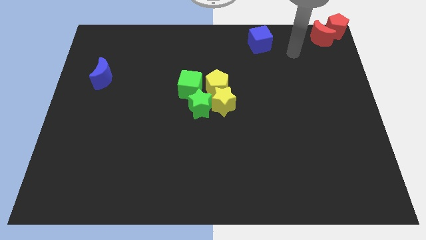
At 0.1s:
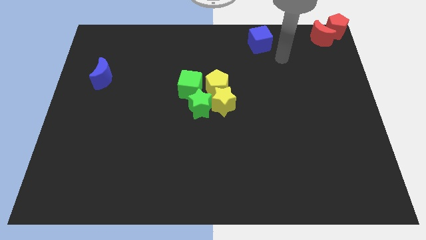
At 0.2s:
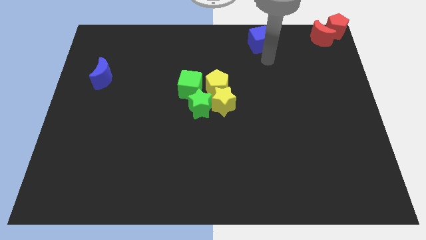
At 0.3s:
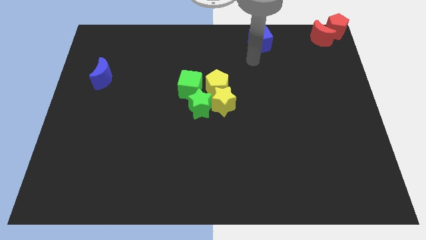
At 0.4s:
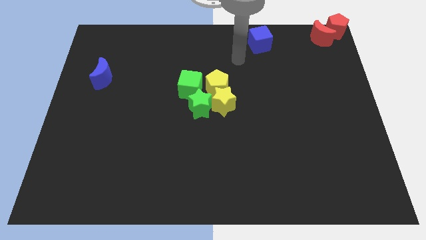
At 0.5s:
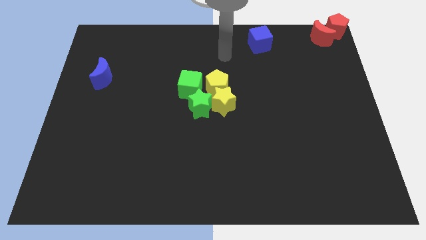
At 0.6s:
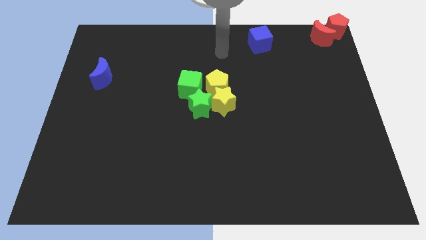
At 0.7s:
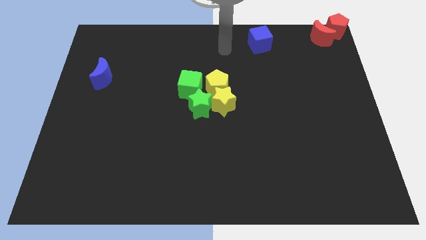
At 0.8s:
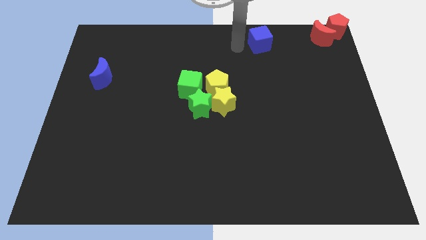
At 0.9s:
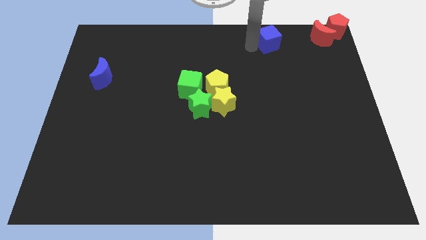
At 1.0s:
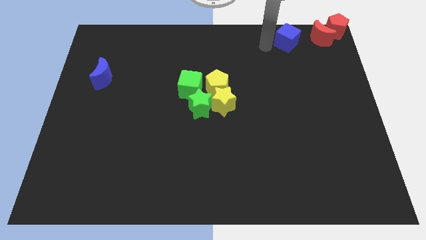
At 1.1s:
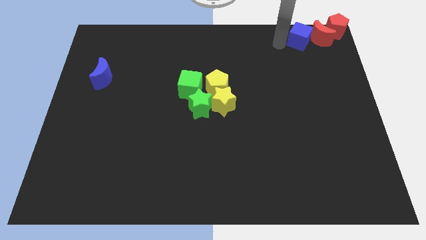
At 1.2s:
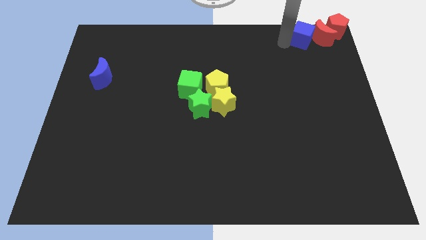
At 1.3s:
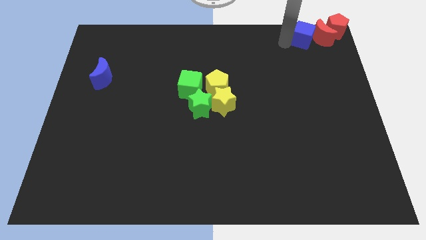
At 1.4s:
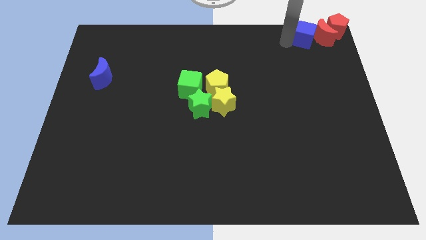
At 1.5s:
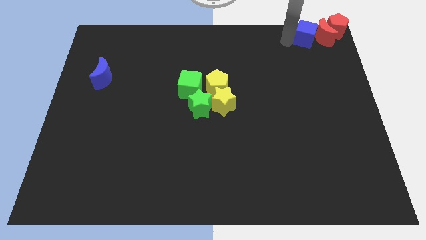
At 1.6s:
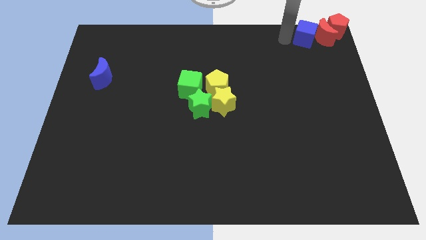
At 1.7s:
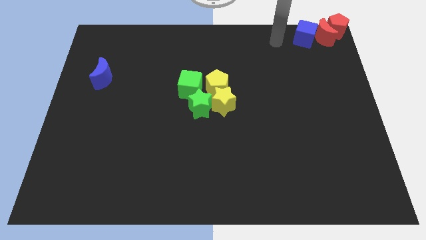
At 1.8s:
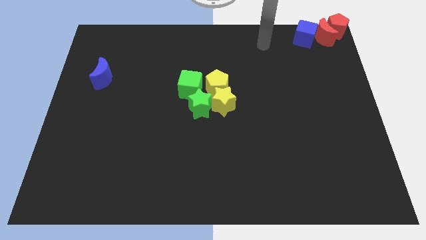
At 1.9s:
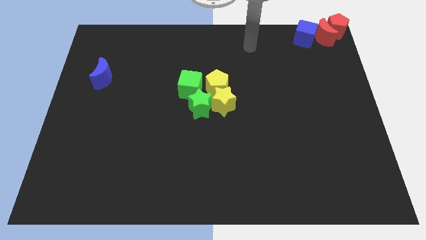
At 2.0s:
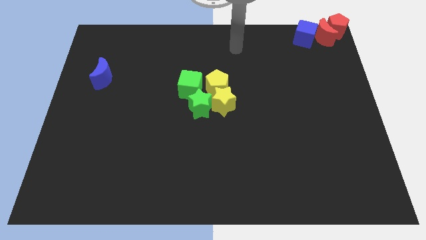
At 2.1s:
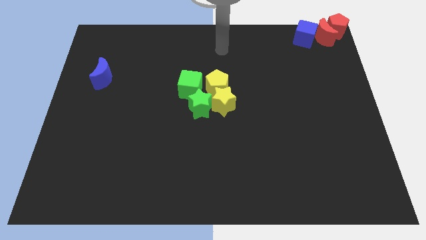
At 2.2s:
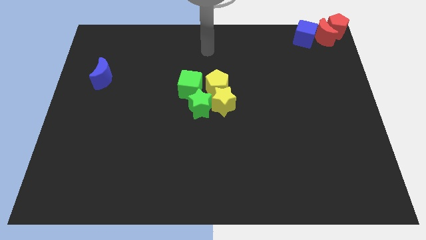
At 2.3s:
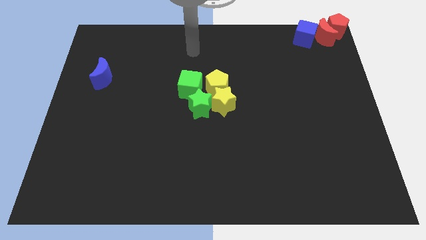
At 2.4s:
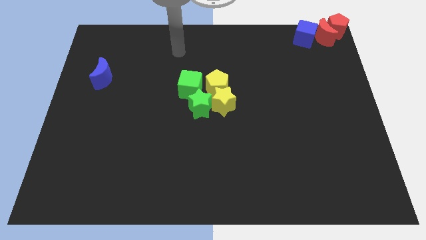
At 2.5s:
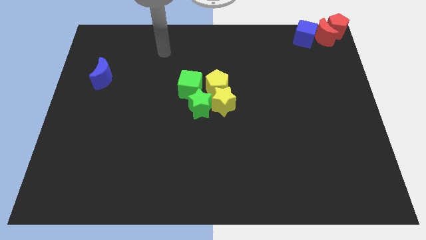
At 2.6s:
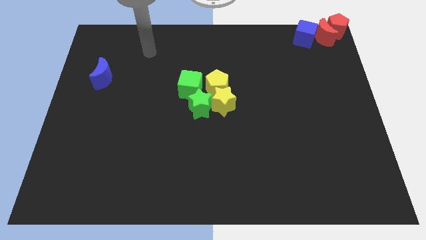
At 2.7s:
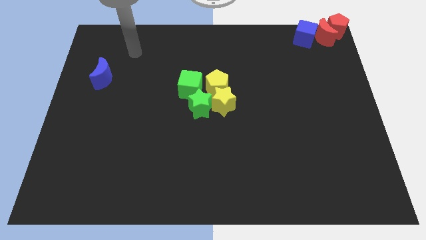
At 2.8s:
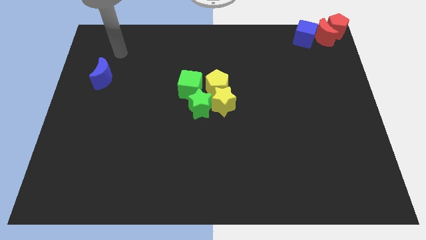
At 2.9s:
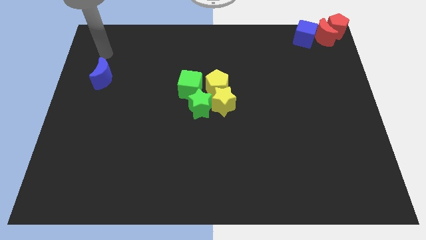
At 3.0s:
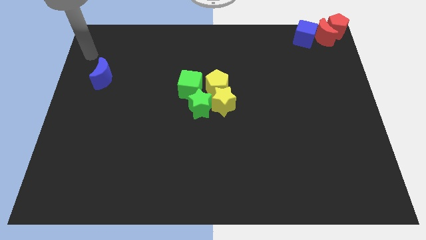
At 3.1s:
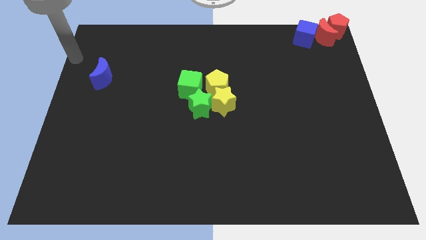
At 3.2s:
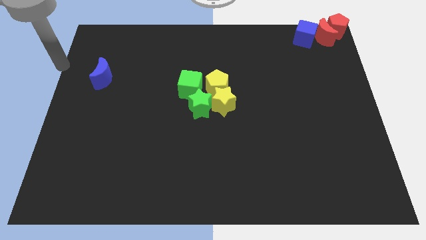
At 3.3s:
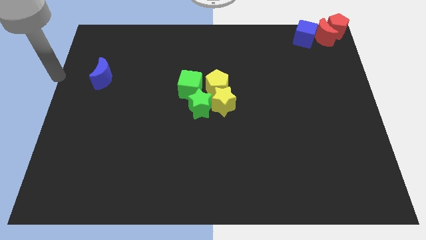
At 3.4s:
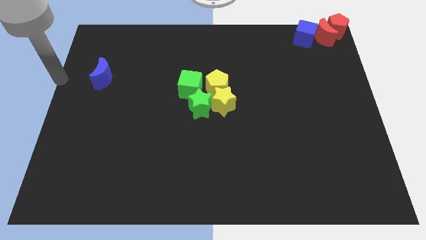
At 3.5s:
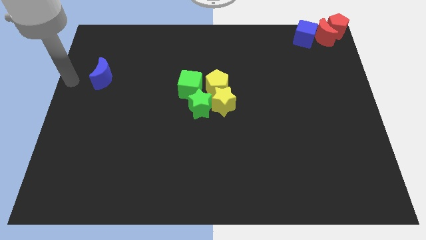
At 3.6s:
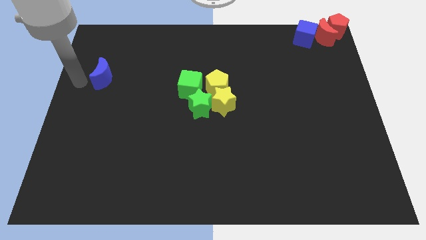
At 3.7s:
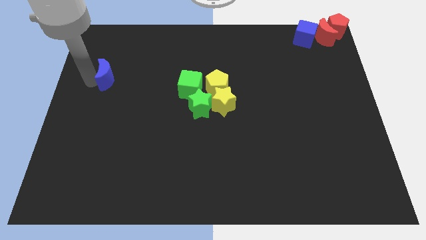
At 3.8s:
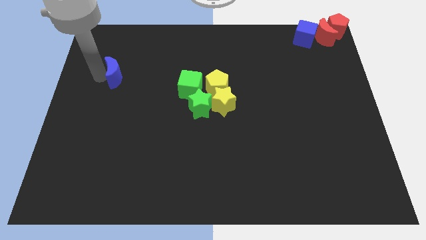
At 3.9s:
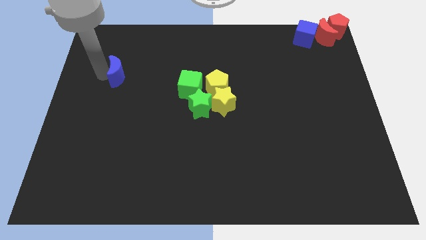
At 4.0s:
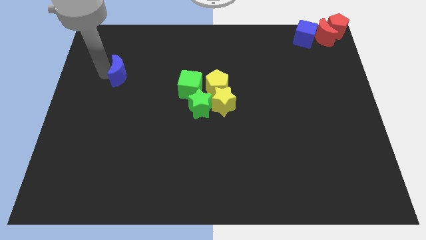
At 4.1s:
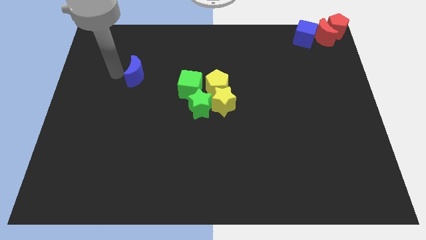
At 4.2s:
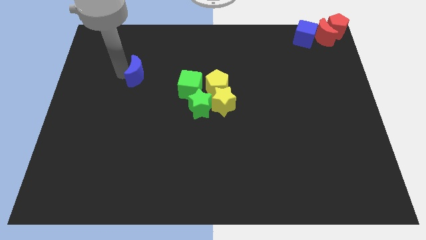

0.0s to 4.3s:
slide the blue cube into the red moon

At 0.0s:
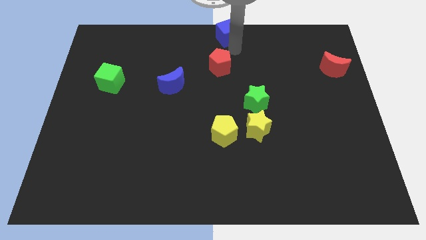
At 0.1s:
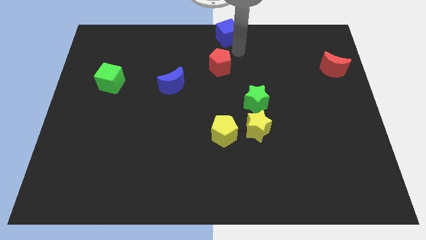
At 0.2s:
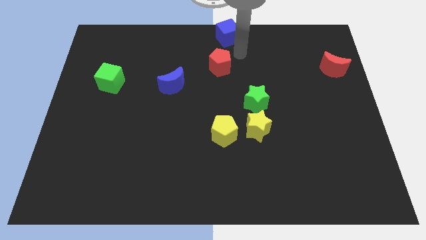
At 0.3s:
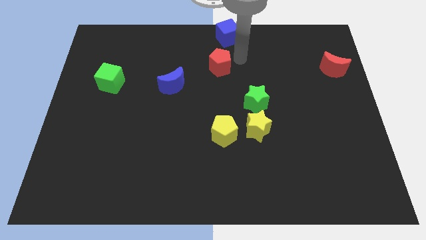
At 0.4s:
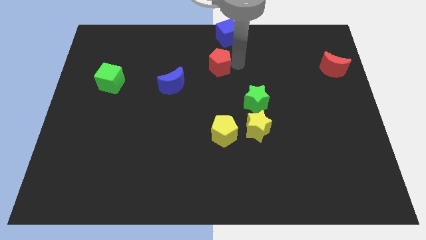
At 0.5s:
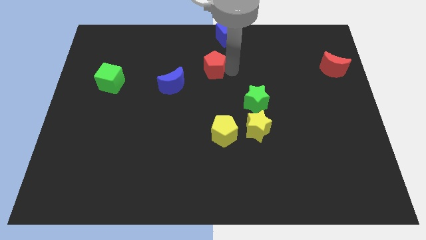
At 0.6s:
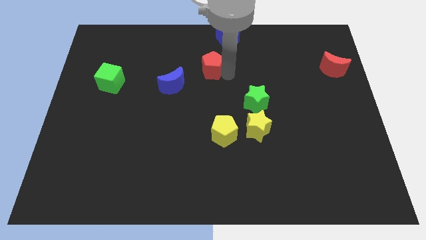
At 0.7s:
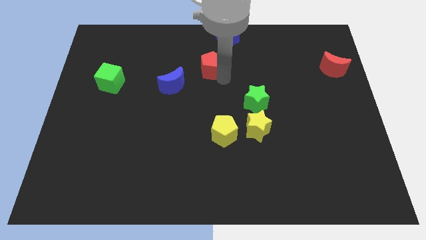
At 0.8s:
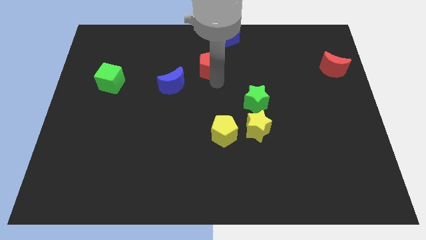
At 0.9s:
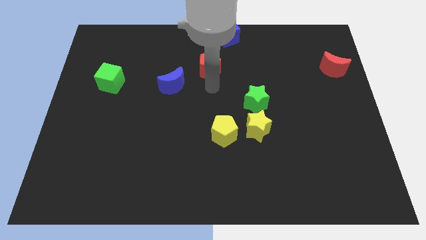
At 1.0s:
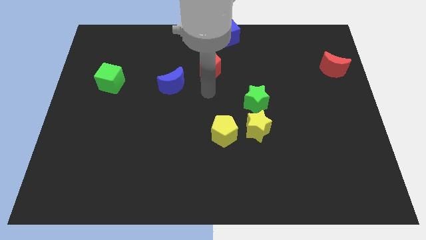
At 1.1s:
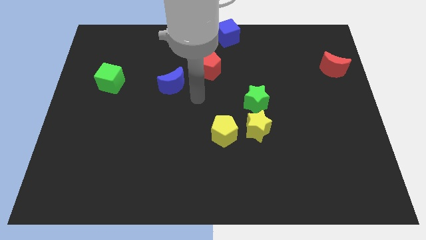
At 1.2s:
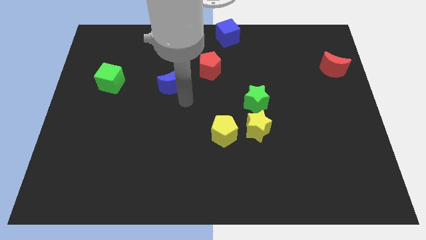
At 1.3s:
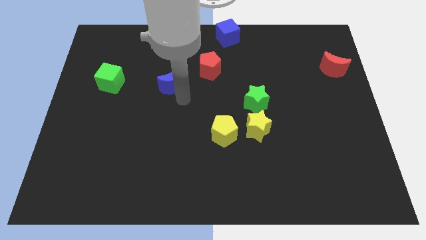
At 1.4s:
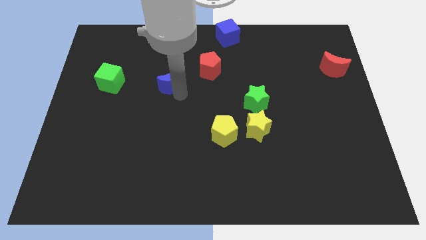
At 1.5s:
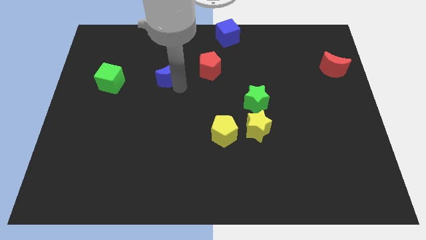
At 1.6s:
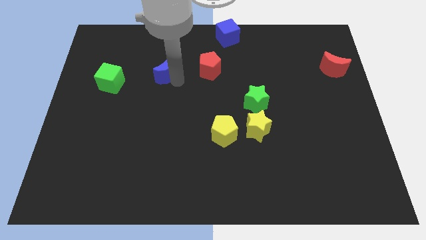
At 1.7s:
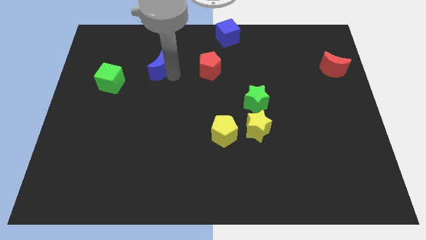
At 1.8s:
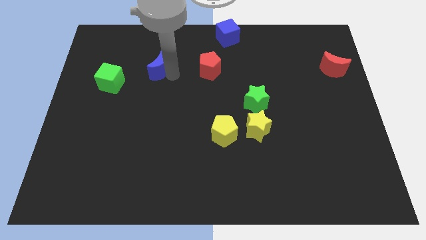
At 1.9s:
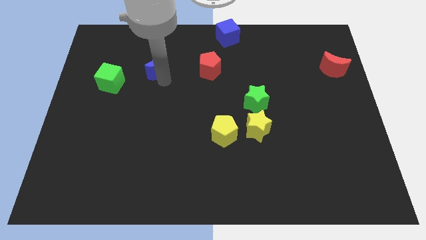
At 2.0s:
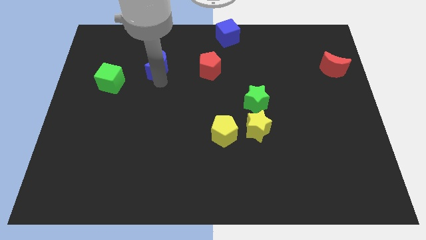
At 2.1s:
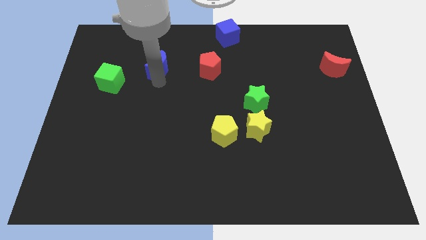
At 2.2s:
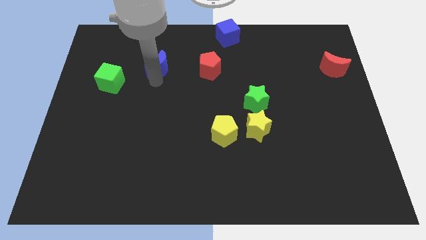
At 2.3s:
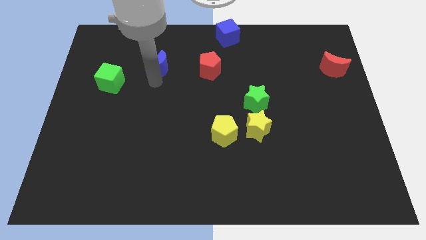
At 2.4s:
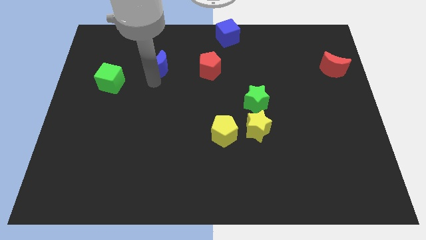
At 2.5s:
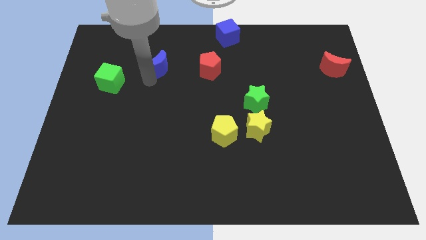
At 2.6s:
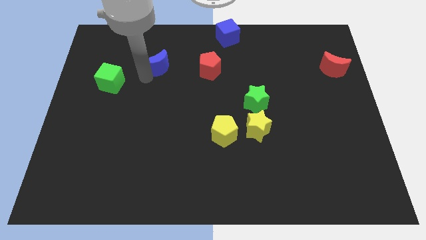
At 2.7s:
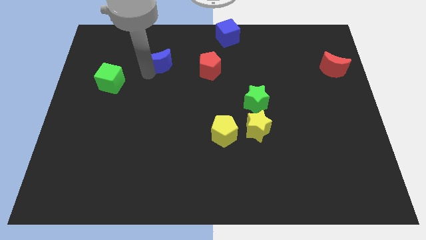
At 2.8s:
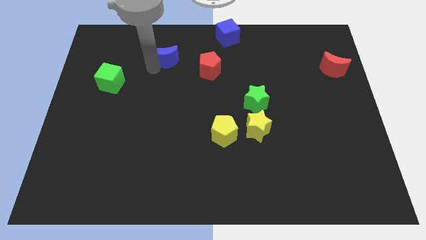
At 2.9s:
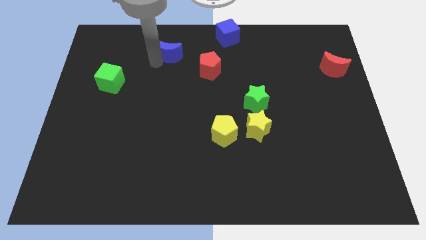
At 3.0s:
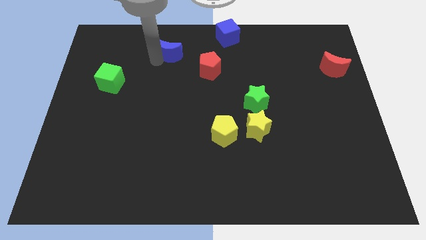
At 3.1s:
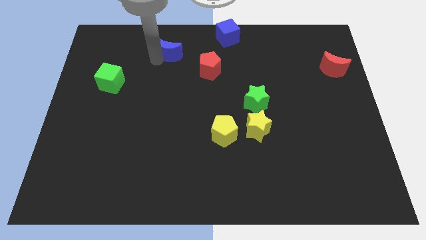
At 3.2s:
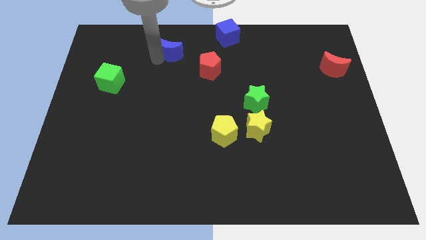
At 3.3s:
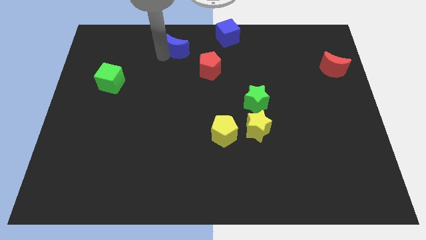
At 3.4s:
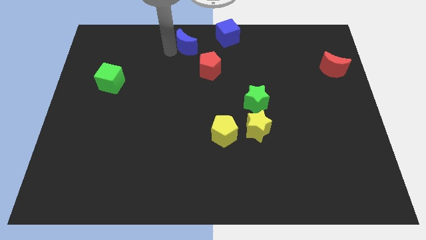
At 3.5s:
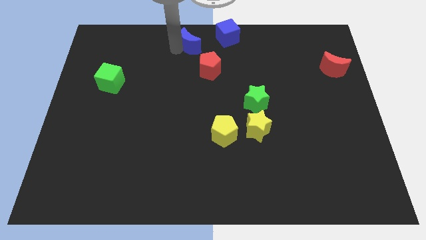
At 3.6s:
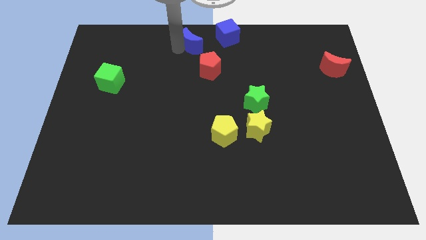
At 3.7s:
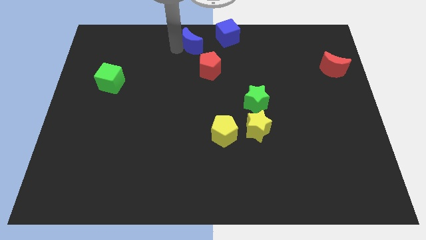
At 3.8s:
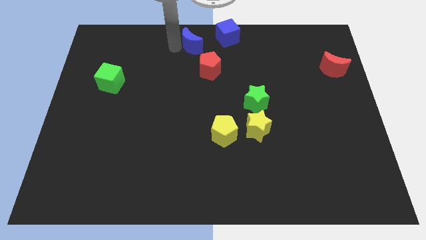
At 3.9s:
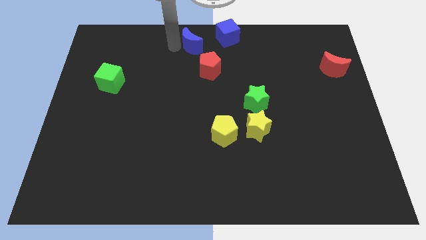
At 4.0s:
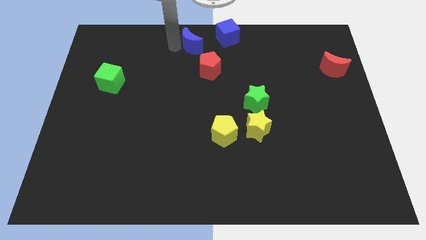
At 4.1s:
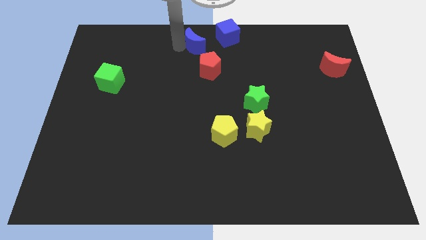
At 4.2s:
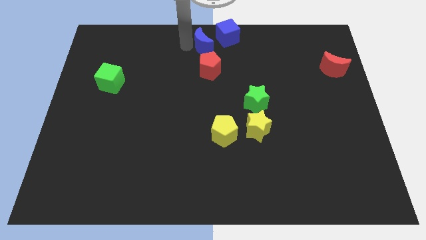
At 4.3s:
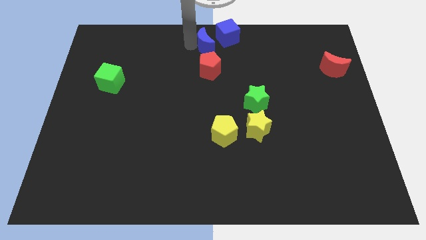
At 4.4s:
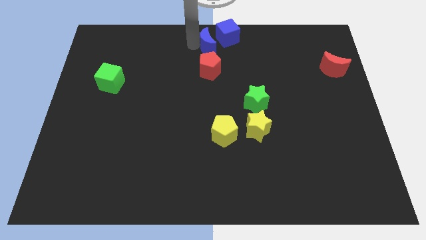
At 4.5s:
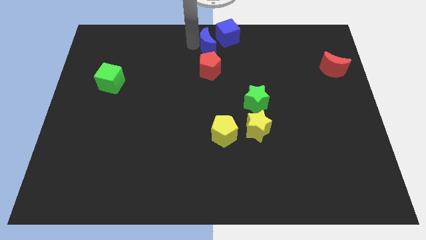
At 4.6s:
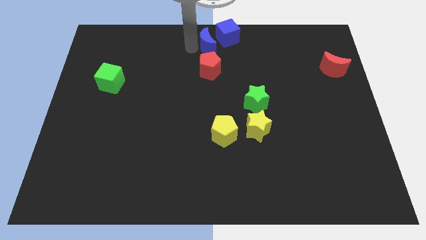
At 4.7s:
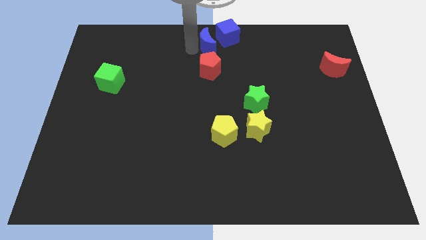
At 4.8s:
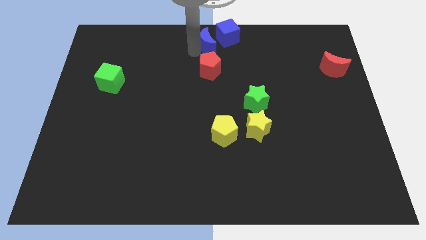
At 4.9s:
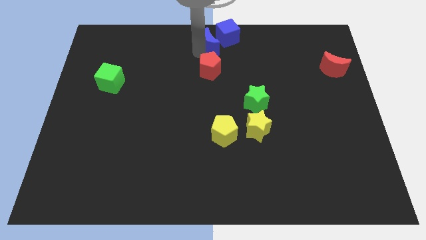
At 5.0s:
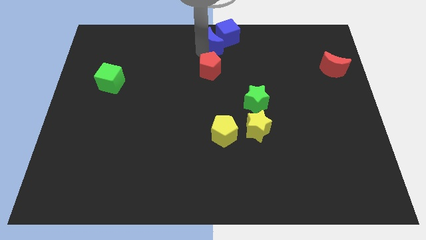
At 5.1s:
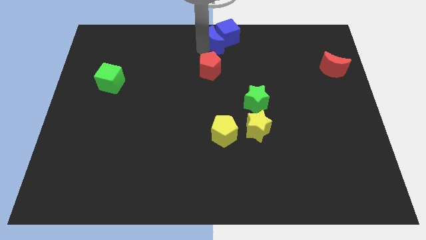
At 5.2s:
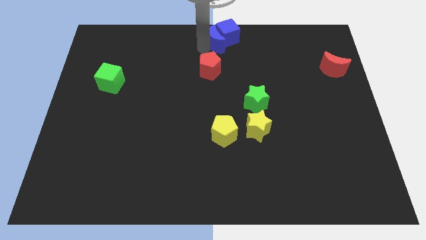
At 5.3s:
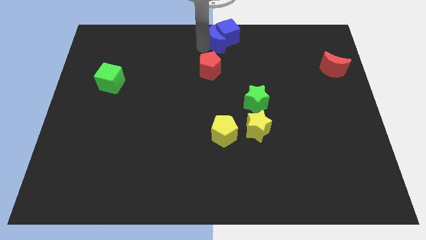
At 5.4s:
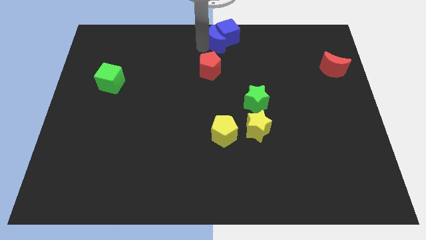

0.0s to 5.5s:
push the blue crescent at the left side of the blue cube
